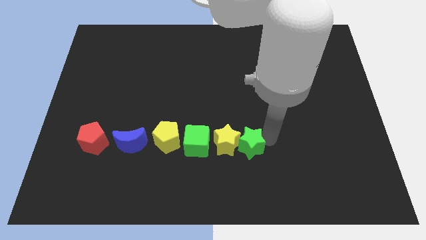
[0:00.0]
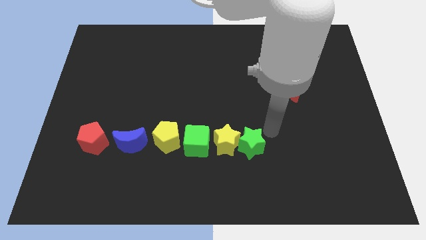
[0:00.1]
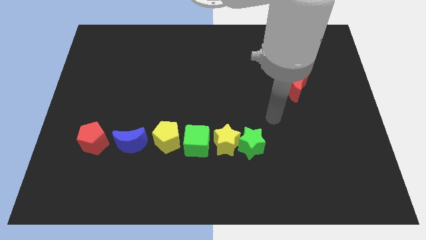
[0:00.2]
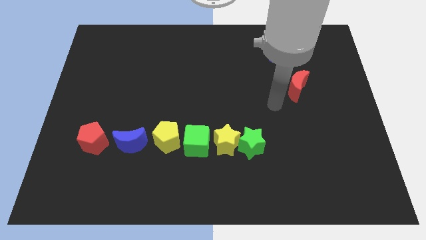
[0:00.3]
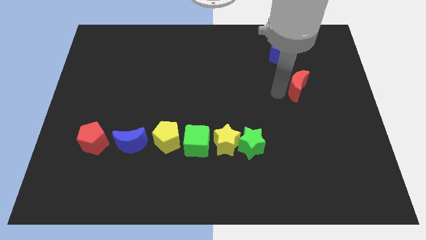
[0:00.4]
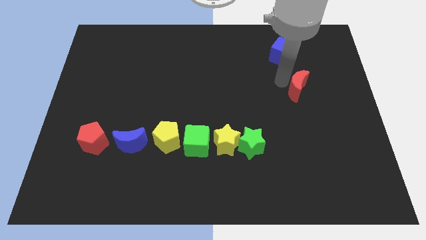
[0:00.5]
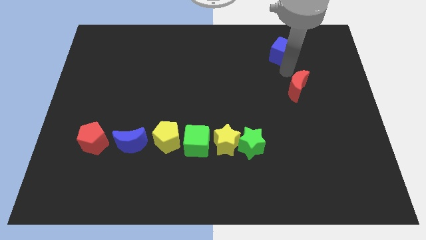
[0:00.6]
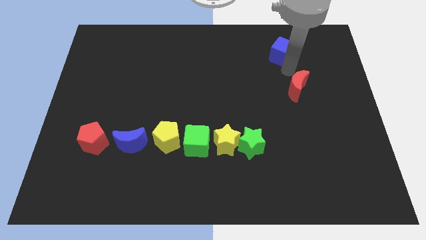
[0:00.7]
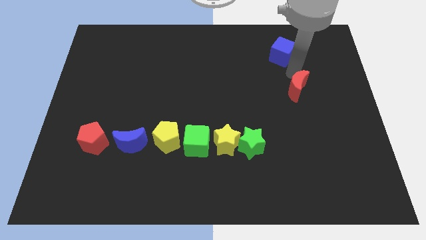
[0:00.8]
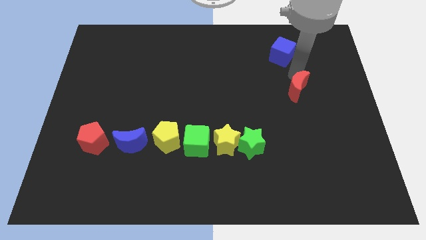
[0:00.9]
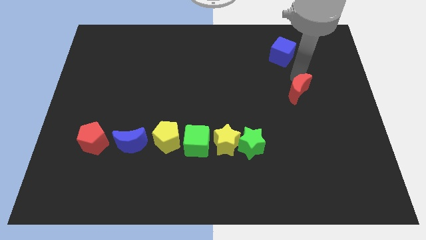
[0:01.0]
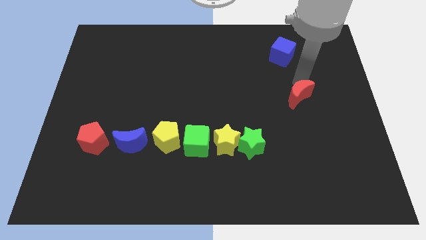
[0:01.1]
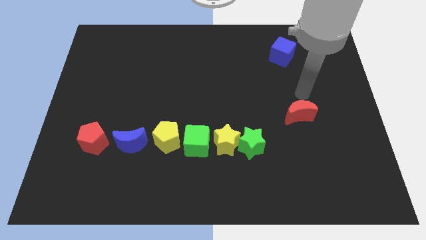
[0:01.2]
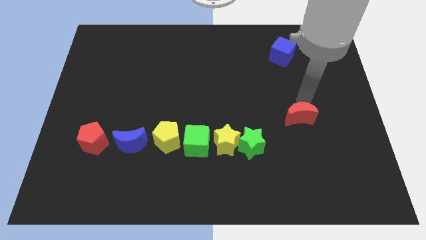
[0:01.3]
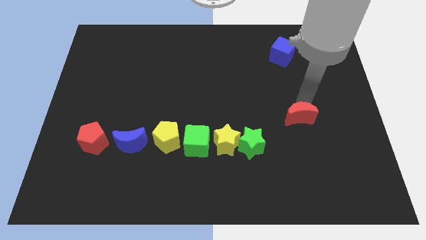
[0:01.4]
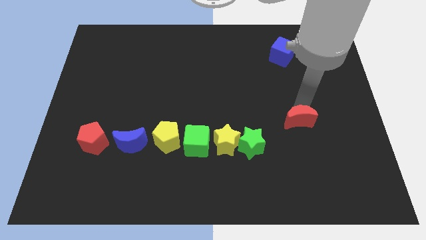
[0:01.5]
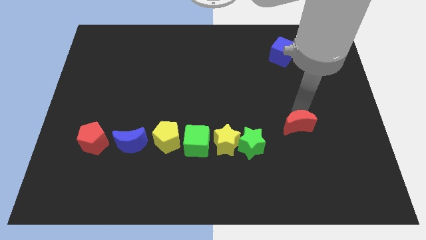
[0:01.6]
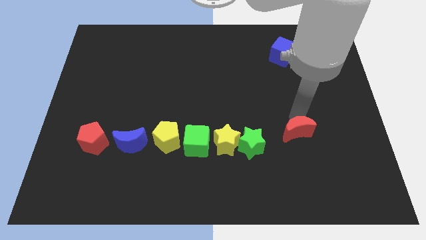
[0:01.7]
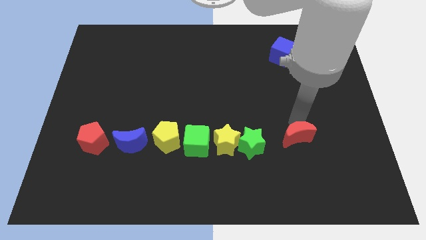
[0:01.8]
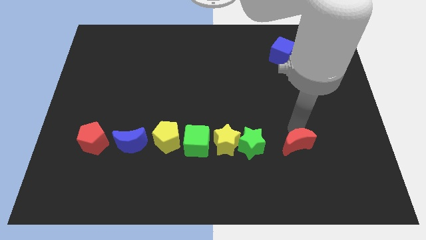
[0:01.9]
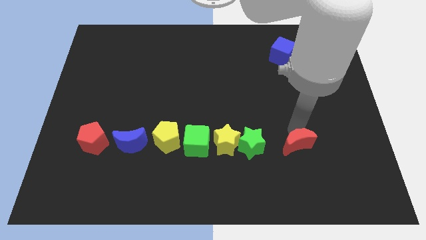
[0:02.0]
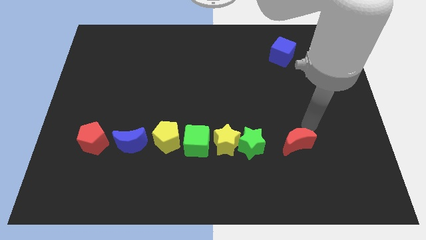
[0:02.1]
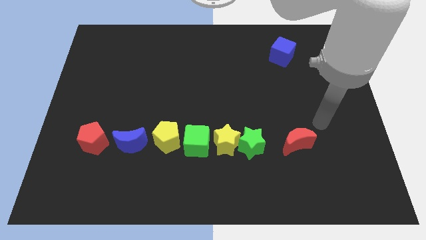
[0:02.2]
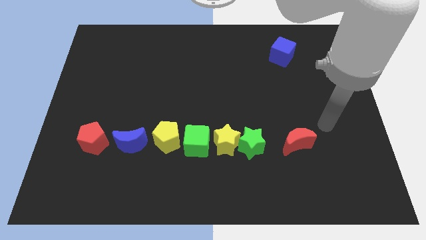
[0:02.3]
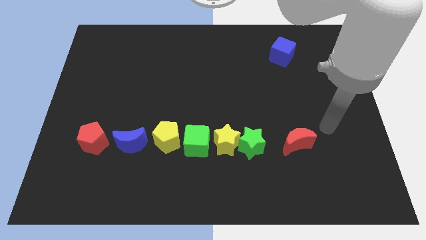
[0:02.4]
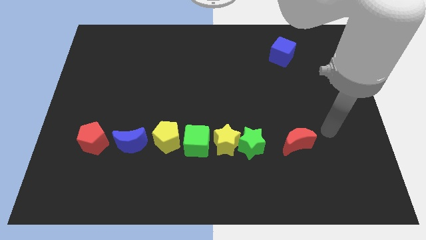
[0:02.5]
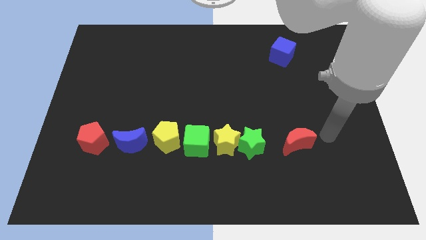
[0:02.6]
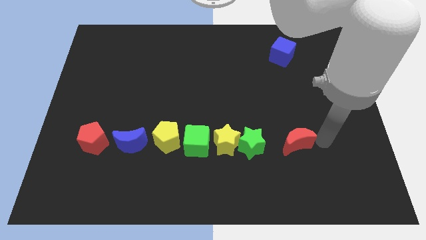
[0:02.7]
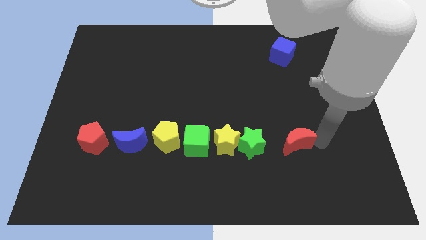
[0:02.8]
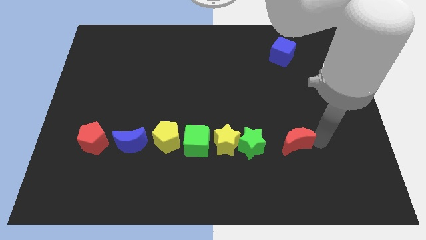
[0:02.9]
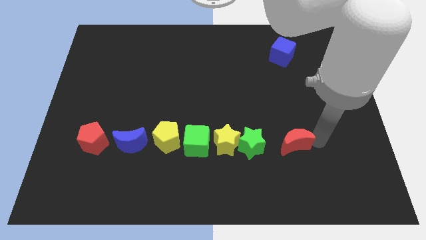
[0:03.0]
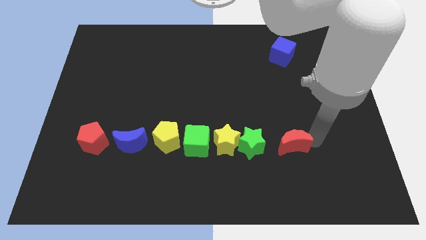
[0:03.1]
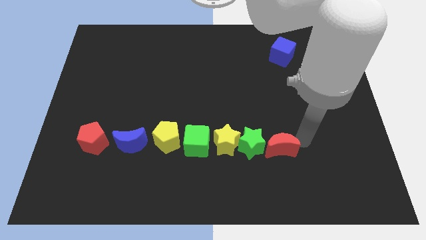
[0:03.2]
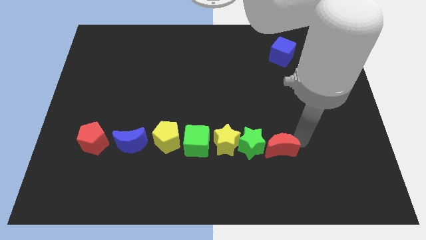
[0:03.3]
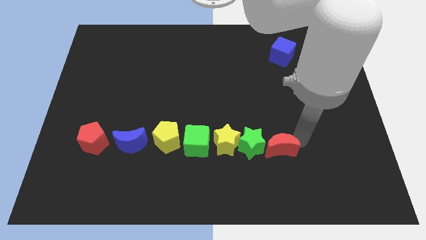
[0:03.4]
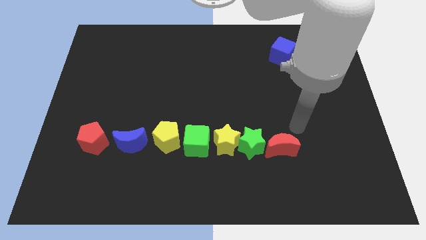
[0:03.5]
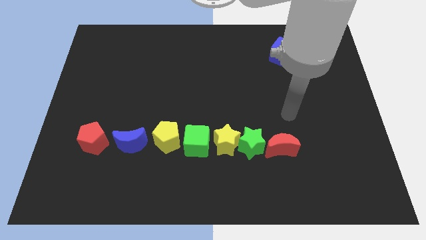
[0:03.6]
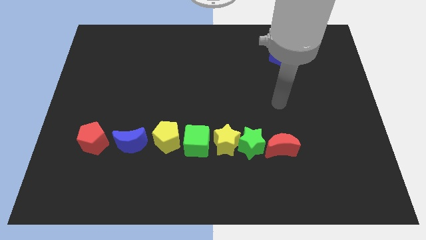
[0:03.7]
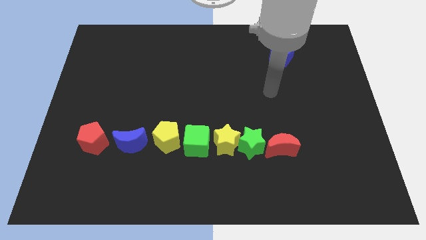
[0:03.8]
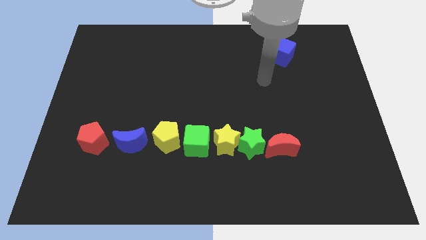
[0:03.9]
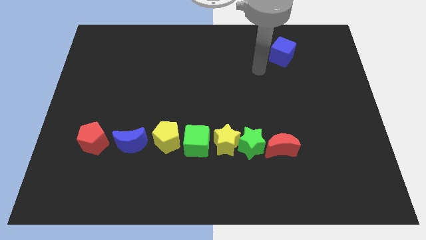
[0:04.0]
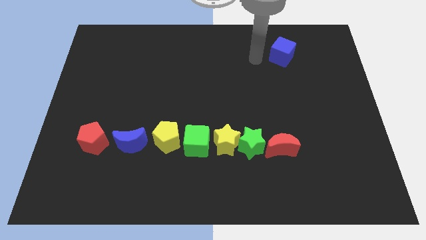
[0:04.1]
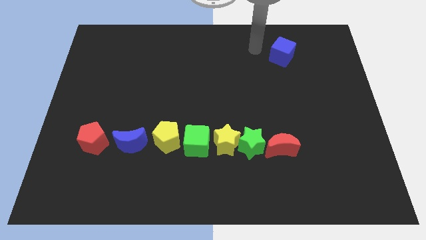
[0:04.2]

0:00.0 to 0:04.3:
move the red moon to the right of the green star

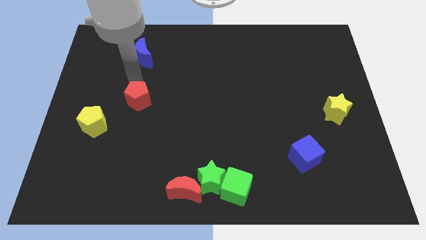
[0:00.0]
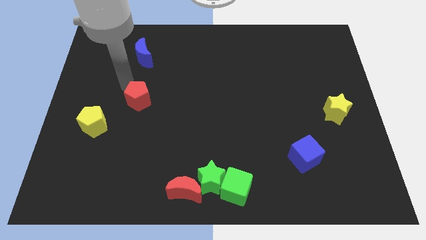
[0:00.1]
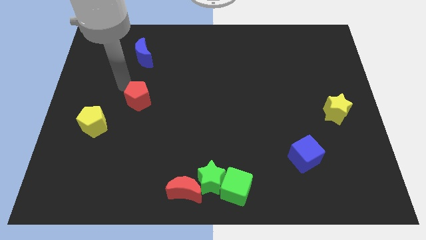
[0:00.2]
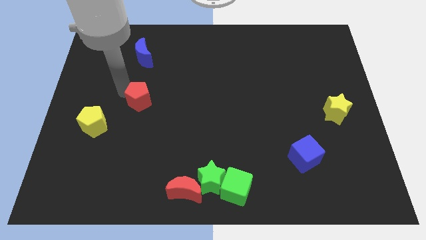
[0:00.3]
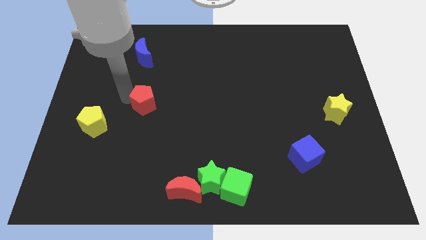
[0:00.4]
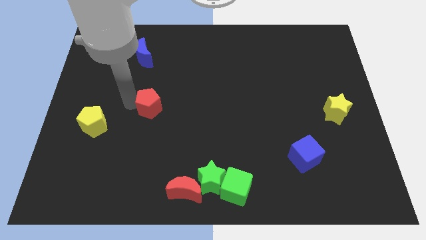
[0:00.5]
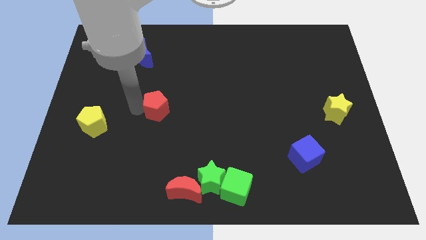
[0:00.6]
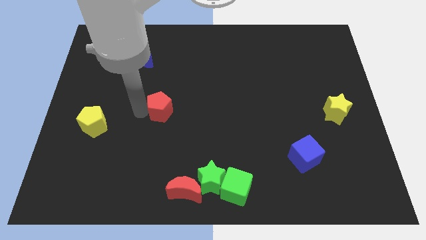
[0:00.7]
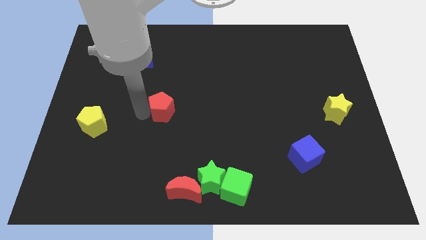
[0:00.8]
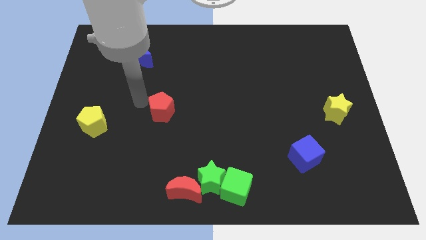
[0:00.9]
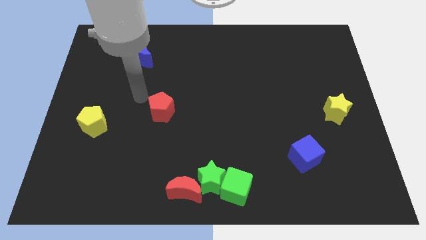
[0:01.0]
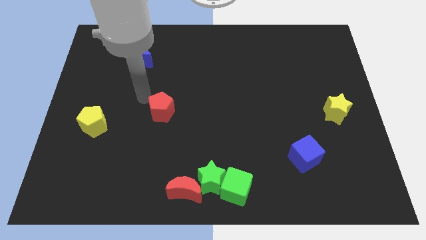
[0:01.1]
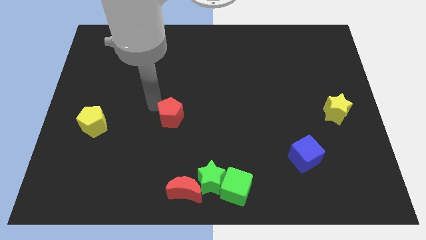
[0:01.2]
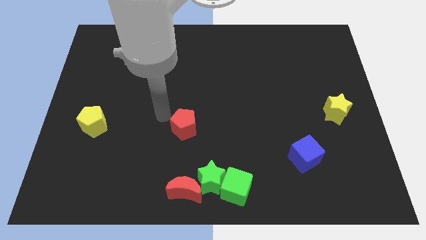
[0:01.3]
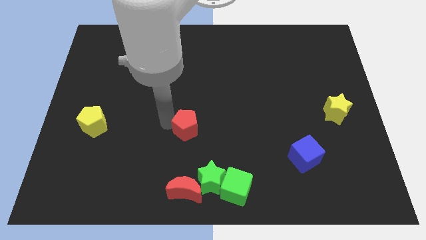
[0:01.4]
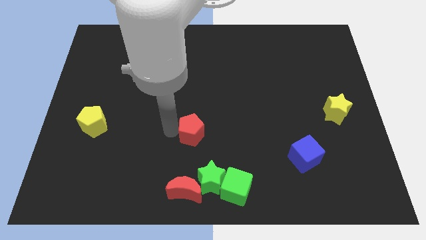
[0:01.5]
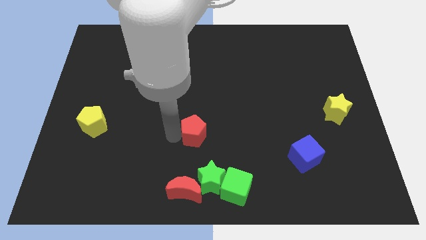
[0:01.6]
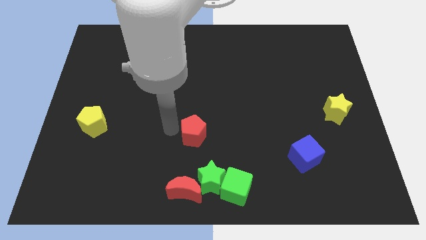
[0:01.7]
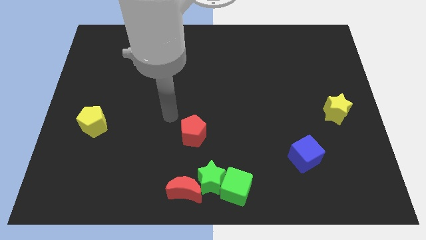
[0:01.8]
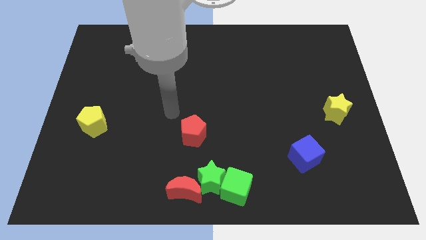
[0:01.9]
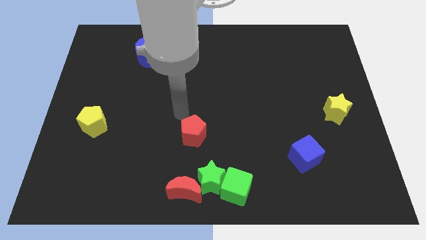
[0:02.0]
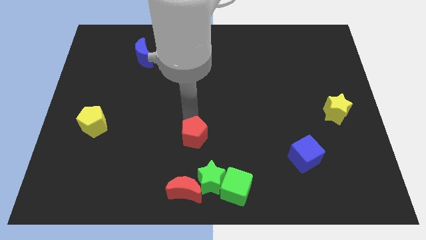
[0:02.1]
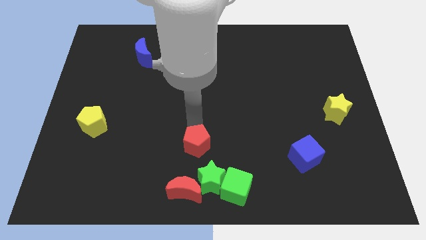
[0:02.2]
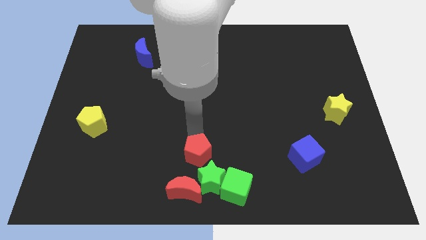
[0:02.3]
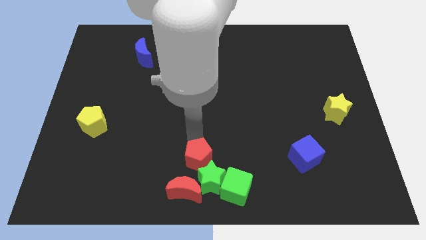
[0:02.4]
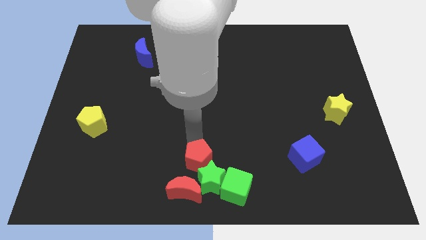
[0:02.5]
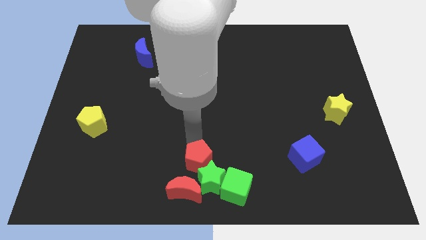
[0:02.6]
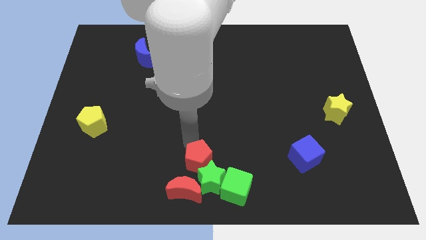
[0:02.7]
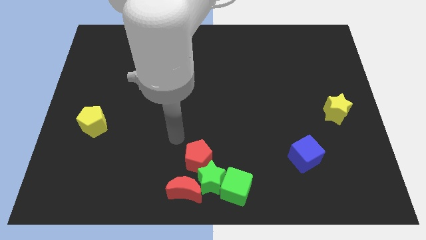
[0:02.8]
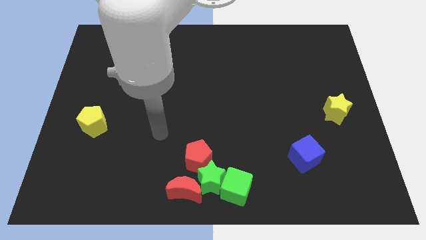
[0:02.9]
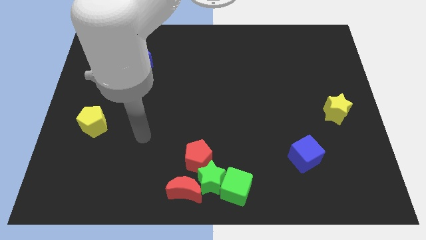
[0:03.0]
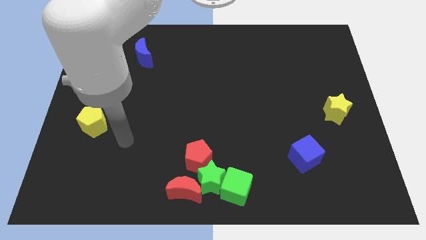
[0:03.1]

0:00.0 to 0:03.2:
push red pentagon towards green star

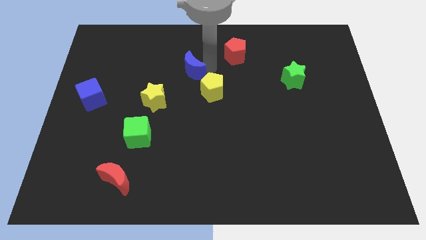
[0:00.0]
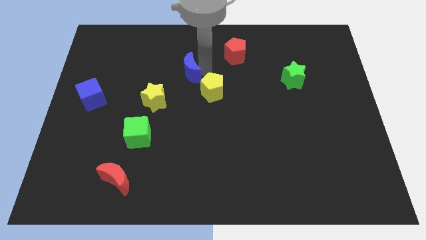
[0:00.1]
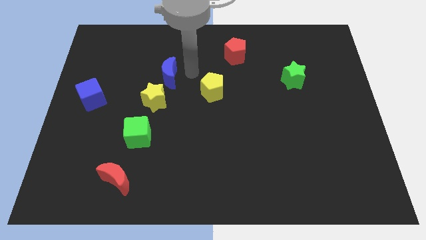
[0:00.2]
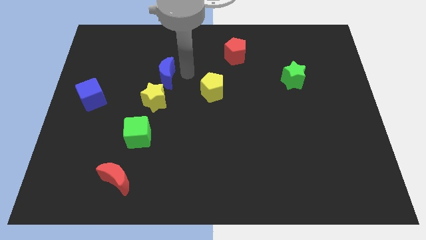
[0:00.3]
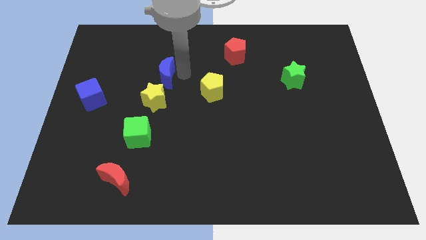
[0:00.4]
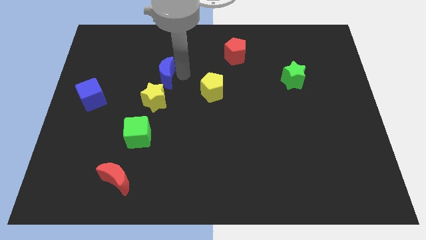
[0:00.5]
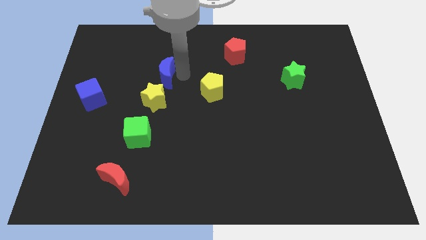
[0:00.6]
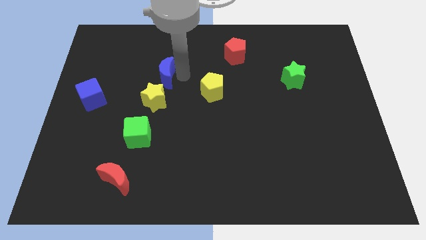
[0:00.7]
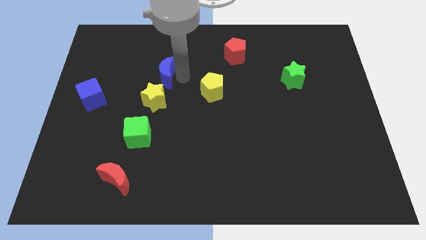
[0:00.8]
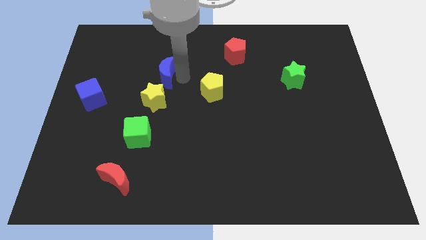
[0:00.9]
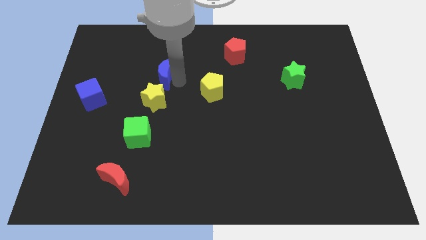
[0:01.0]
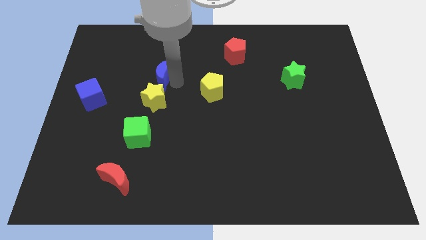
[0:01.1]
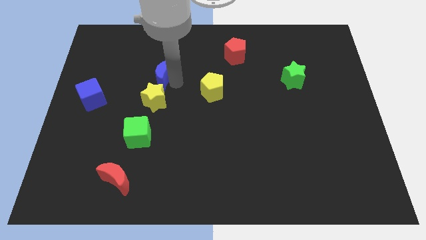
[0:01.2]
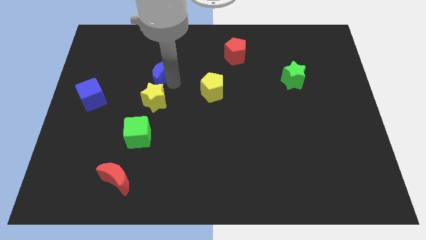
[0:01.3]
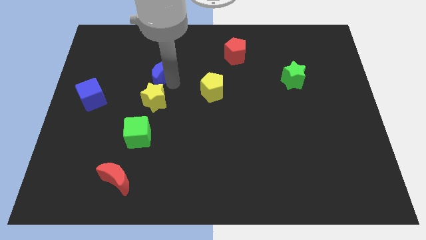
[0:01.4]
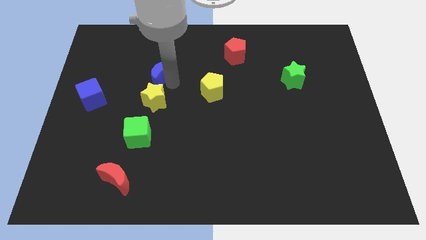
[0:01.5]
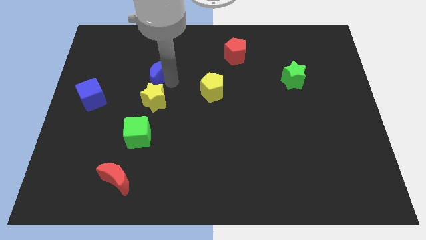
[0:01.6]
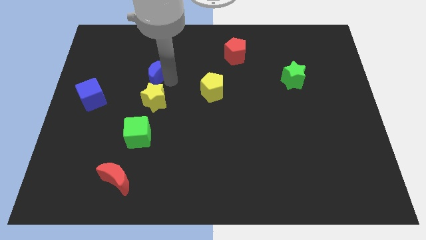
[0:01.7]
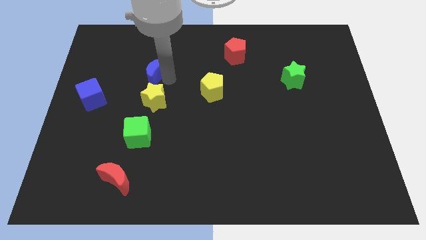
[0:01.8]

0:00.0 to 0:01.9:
move the blue moon above the yellow star
